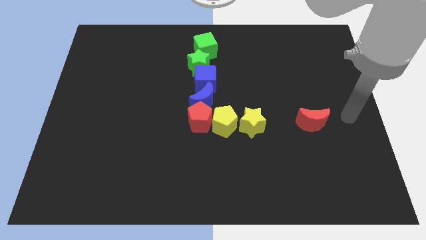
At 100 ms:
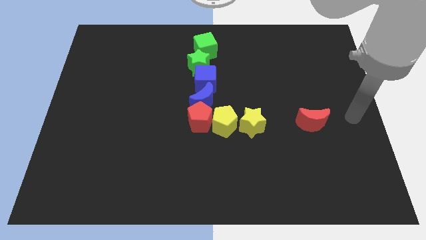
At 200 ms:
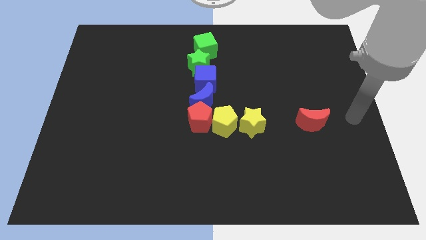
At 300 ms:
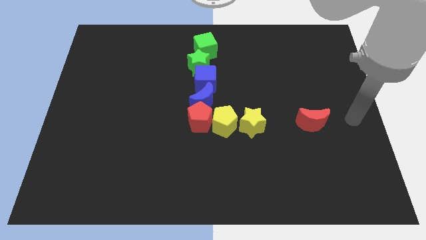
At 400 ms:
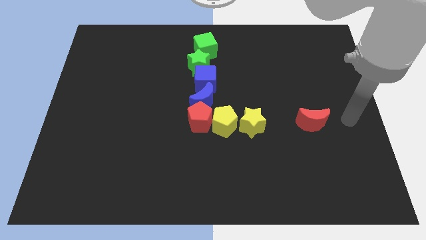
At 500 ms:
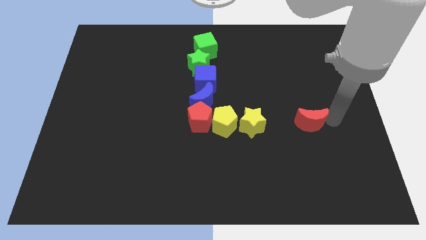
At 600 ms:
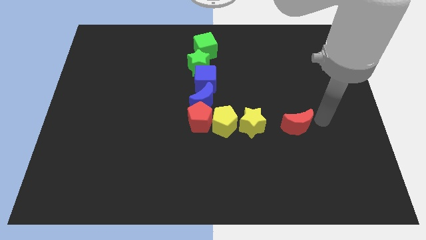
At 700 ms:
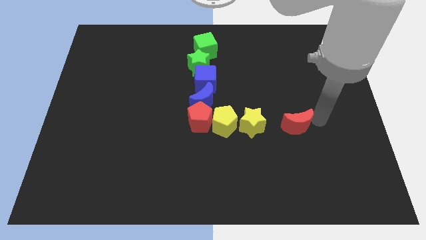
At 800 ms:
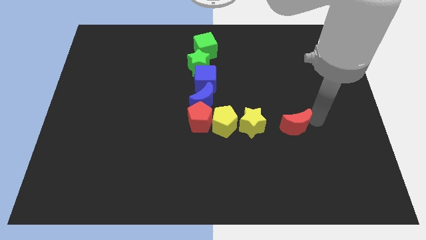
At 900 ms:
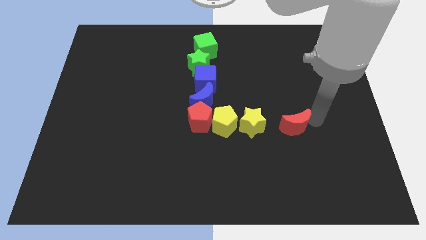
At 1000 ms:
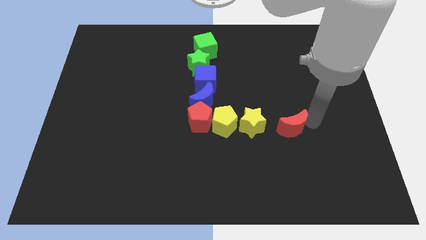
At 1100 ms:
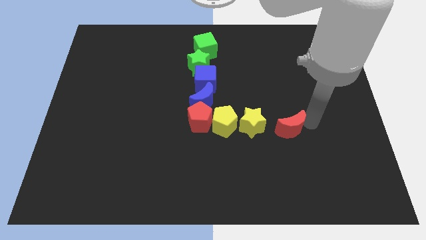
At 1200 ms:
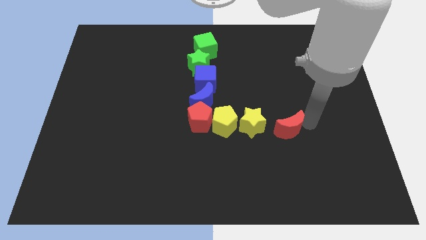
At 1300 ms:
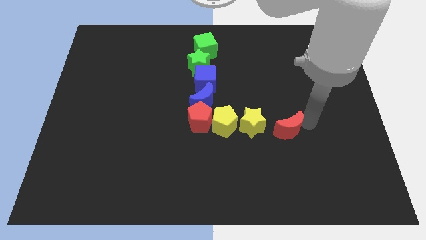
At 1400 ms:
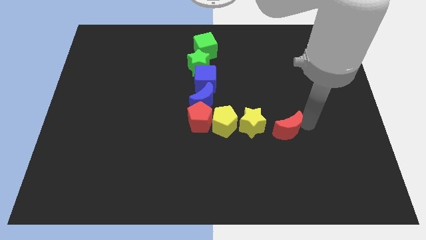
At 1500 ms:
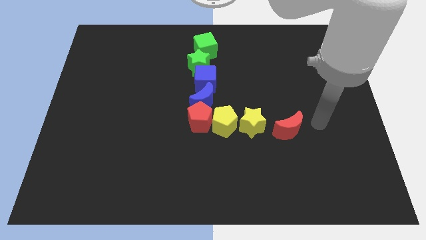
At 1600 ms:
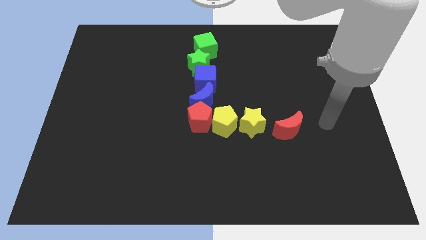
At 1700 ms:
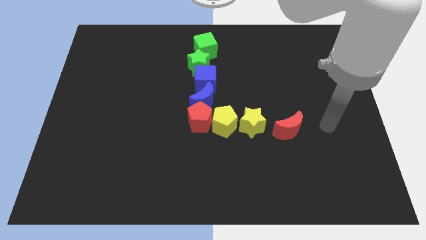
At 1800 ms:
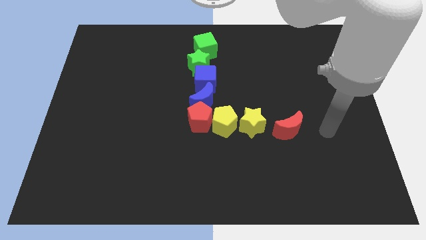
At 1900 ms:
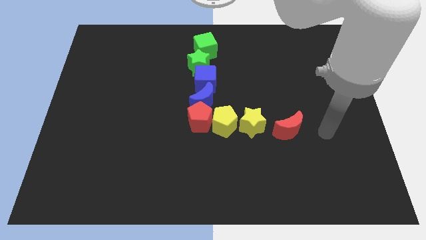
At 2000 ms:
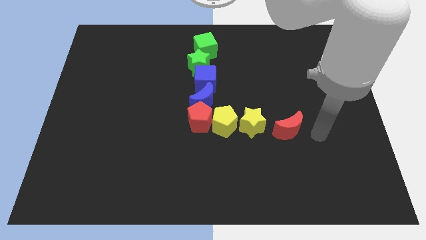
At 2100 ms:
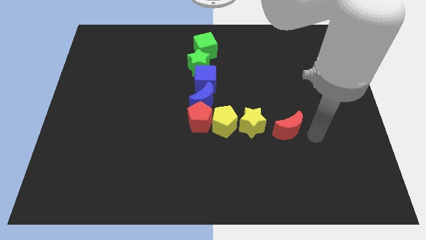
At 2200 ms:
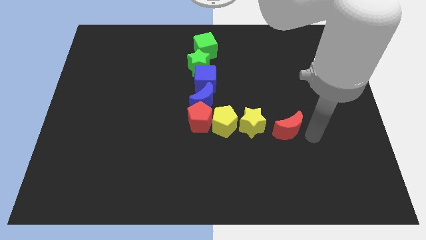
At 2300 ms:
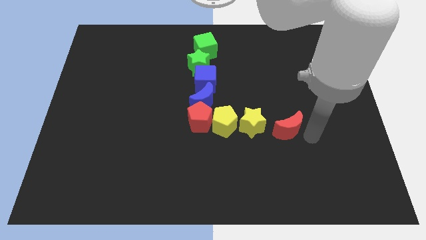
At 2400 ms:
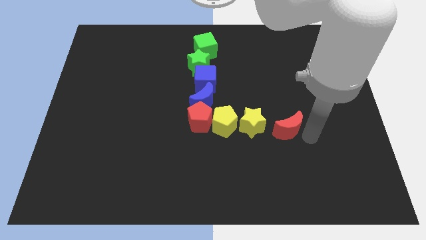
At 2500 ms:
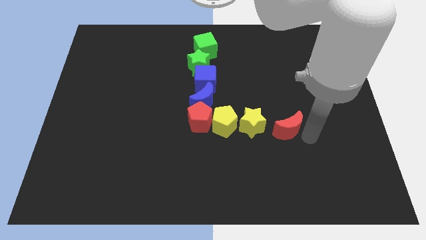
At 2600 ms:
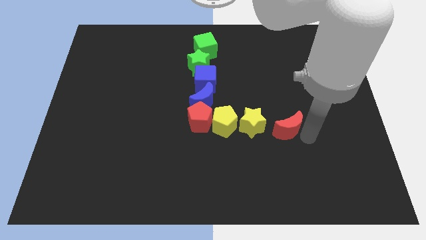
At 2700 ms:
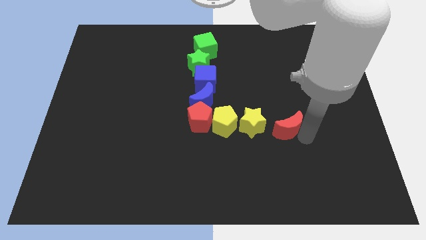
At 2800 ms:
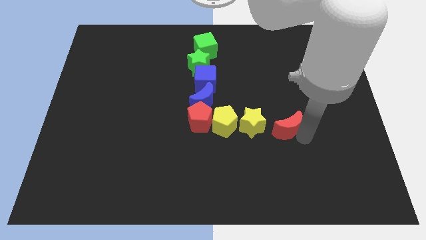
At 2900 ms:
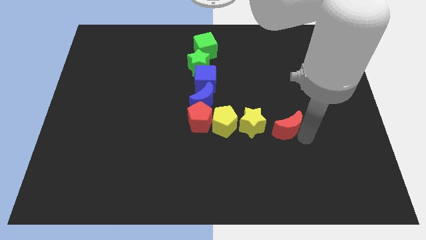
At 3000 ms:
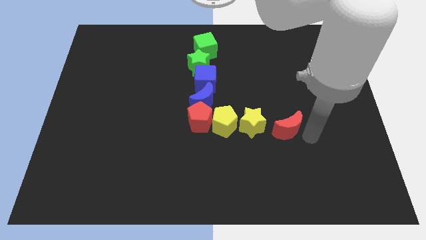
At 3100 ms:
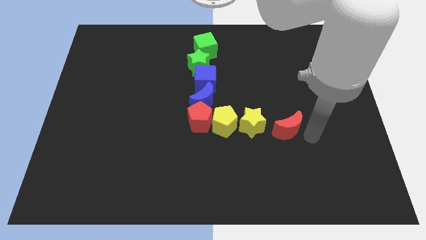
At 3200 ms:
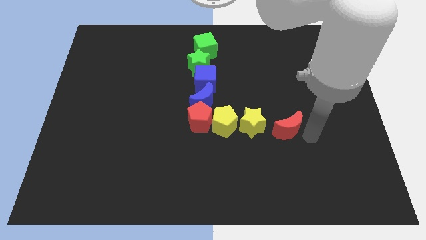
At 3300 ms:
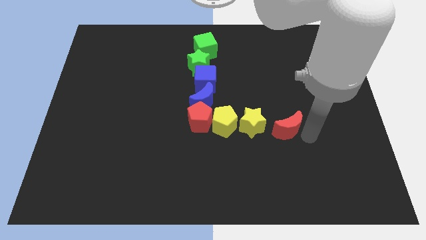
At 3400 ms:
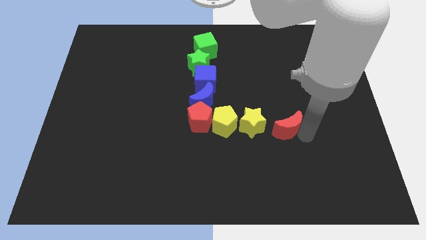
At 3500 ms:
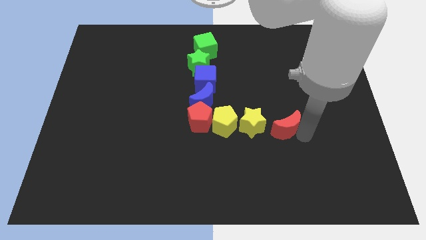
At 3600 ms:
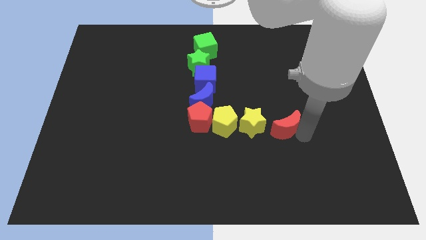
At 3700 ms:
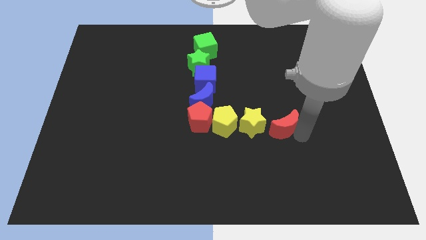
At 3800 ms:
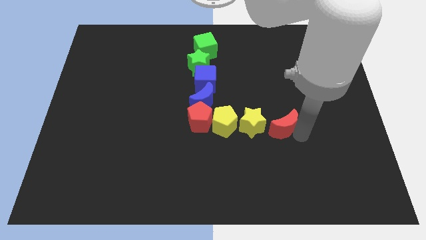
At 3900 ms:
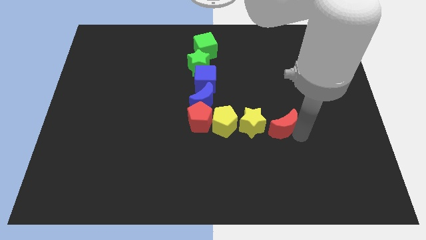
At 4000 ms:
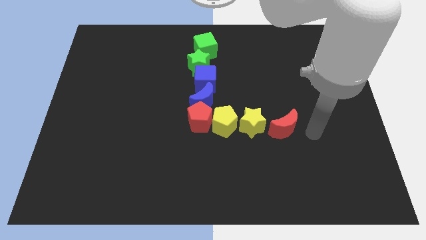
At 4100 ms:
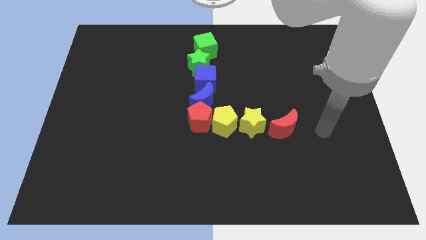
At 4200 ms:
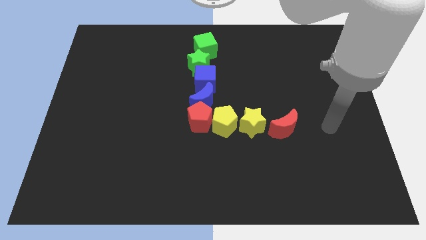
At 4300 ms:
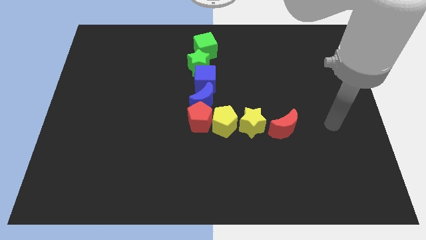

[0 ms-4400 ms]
push the red moon to the right side of the yellow star

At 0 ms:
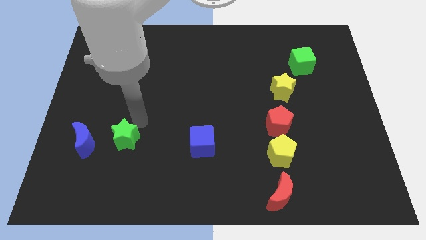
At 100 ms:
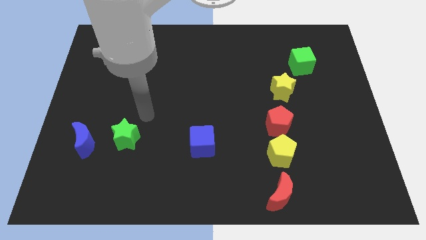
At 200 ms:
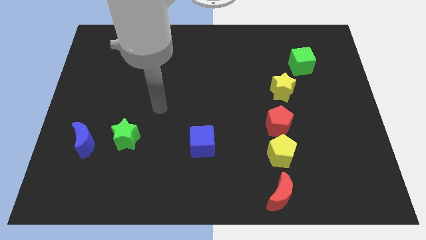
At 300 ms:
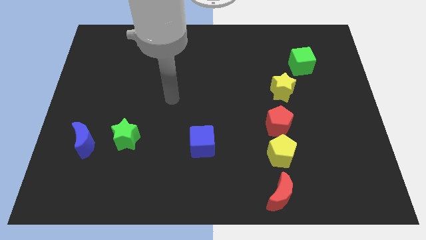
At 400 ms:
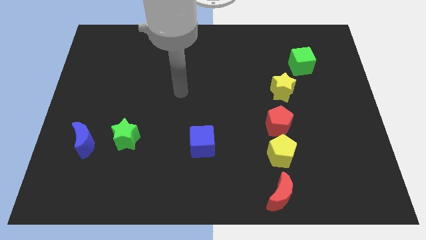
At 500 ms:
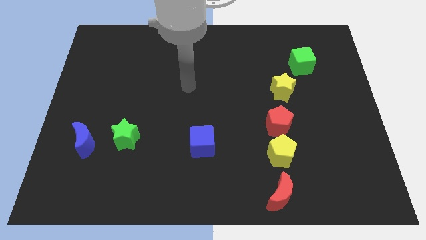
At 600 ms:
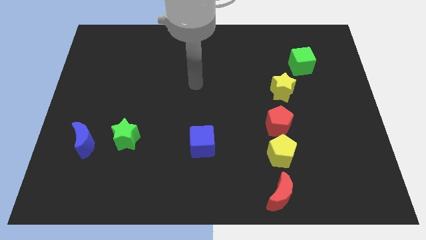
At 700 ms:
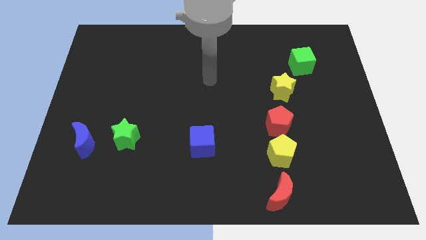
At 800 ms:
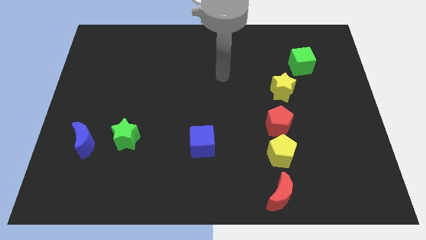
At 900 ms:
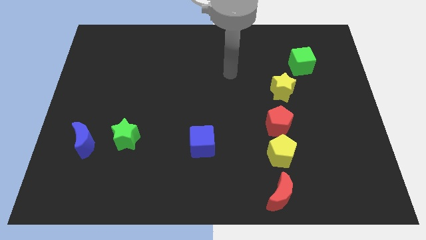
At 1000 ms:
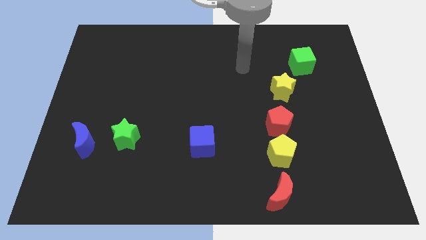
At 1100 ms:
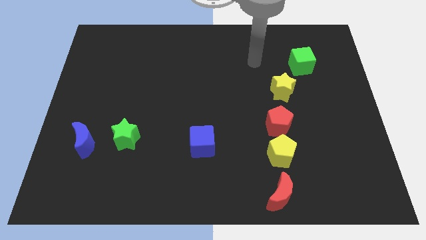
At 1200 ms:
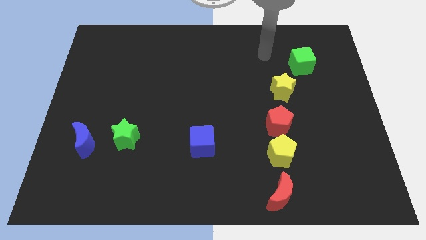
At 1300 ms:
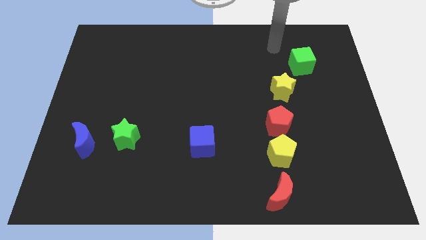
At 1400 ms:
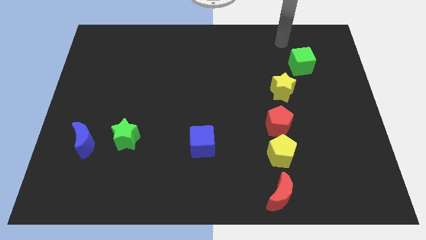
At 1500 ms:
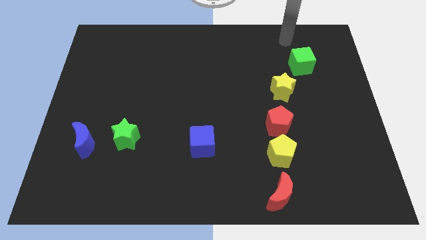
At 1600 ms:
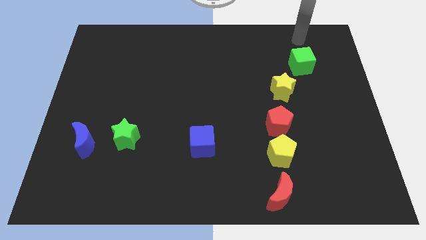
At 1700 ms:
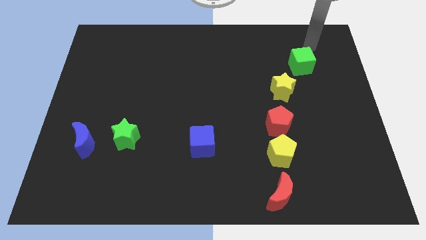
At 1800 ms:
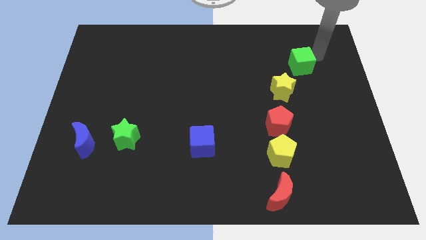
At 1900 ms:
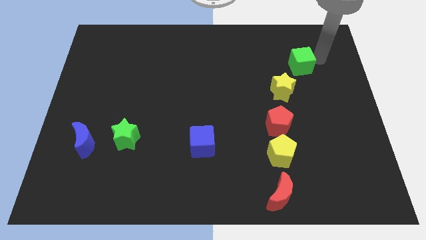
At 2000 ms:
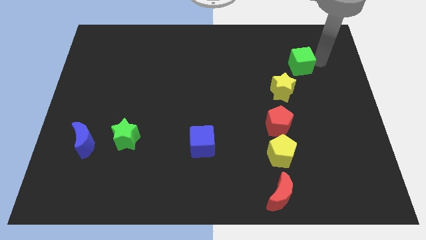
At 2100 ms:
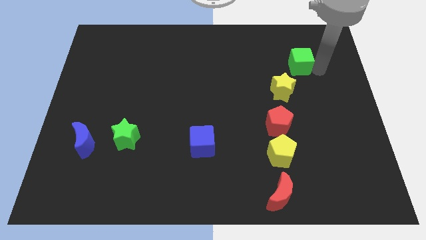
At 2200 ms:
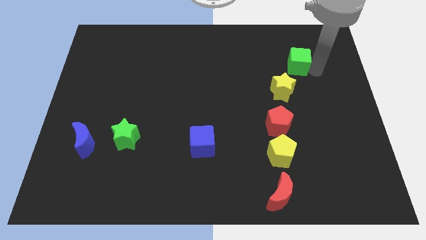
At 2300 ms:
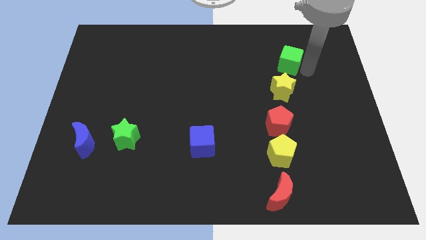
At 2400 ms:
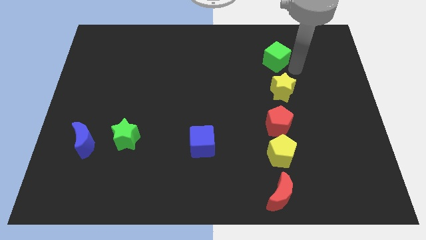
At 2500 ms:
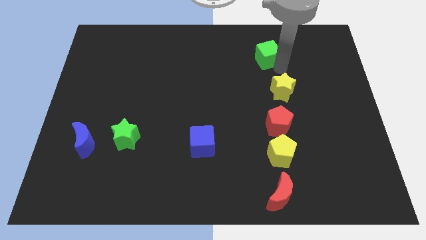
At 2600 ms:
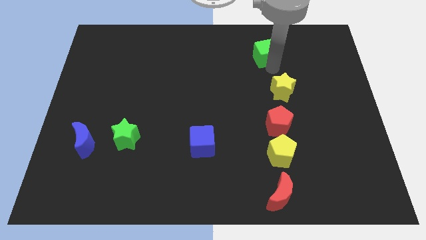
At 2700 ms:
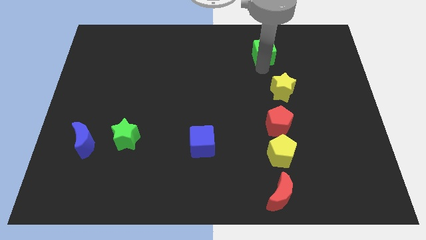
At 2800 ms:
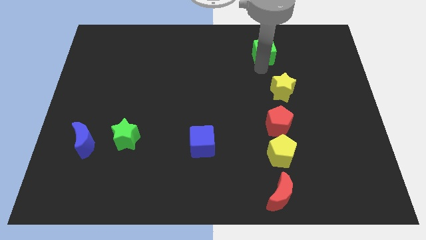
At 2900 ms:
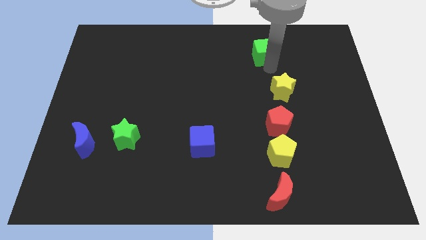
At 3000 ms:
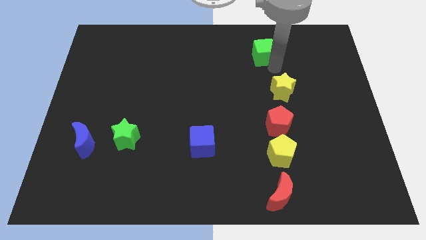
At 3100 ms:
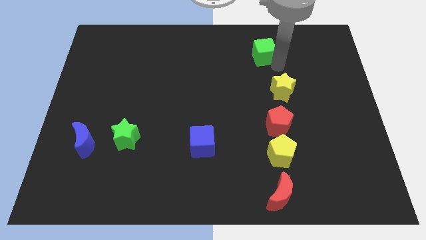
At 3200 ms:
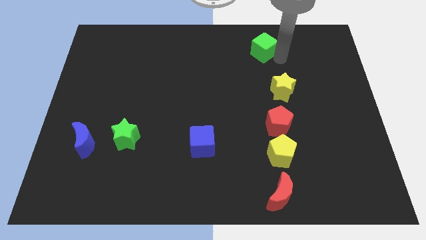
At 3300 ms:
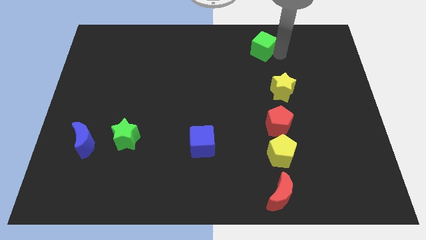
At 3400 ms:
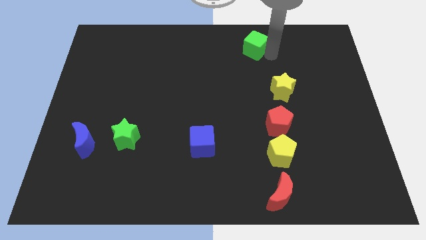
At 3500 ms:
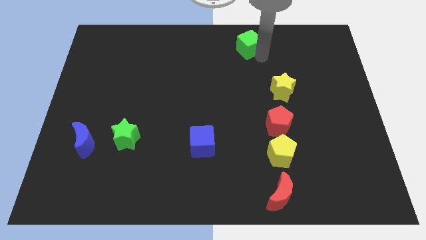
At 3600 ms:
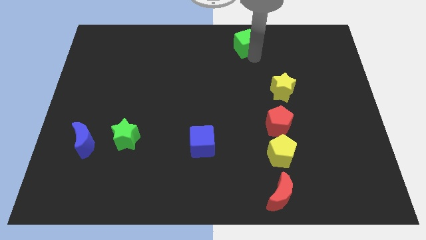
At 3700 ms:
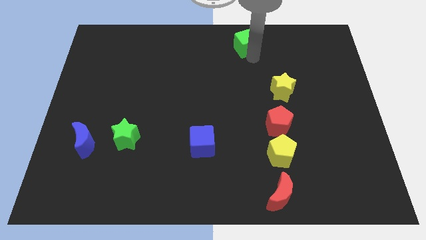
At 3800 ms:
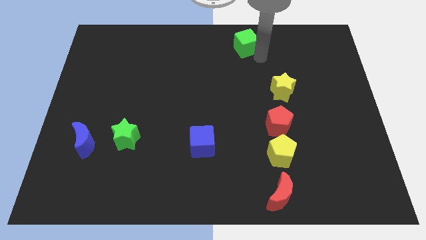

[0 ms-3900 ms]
move the green cube towards top center of the board

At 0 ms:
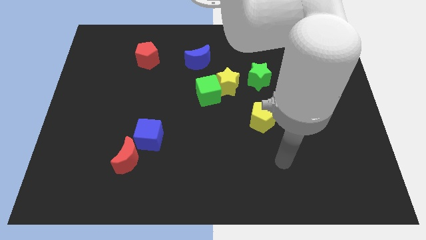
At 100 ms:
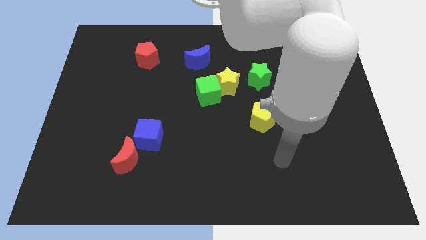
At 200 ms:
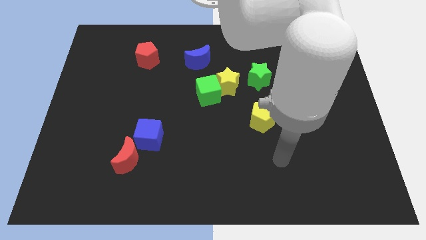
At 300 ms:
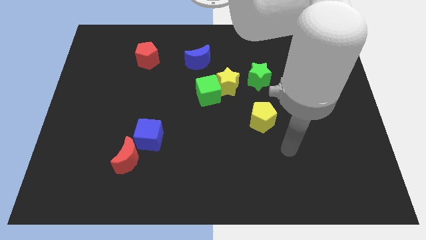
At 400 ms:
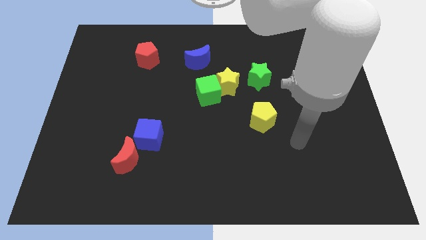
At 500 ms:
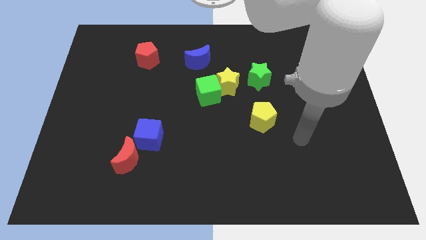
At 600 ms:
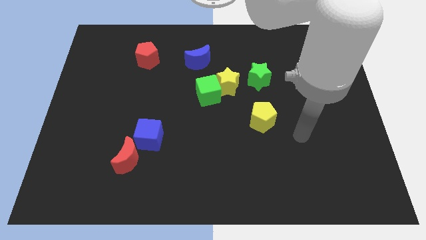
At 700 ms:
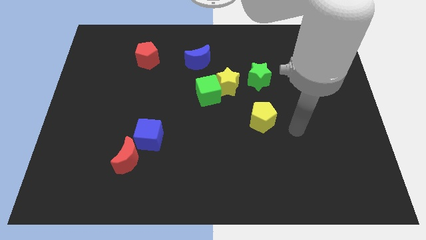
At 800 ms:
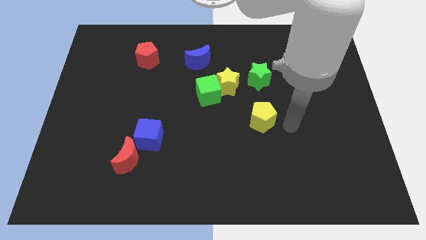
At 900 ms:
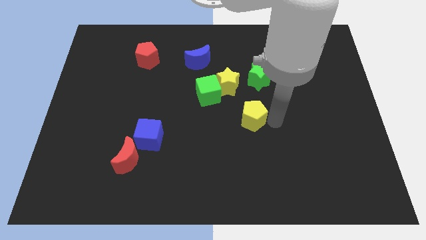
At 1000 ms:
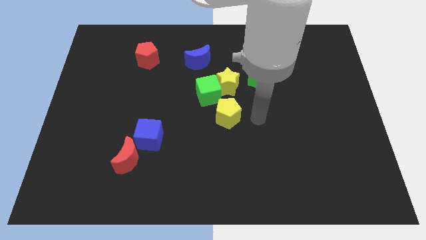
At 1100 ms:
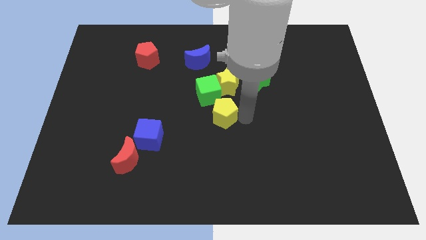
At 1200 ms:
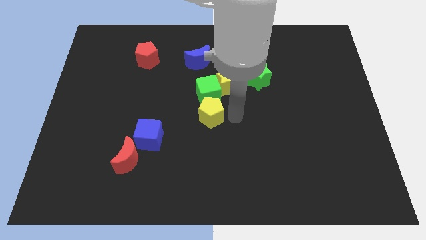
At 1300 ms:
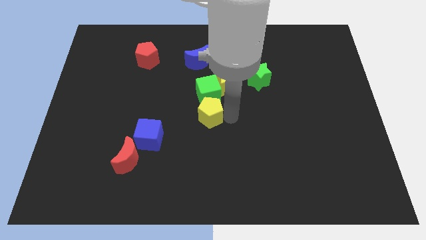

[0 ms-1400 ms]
push the yellow pentagon at the bottom of the green cube
